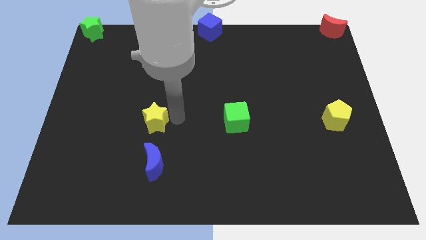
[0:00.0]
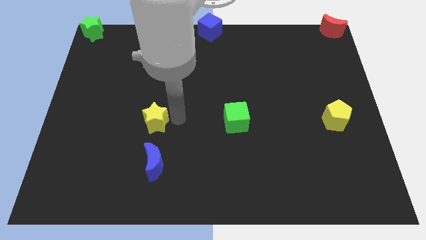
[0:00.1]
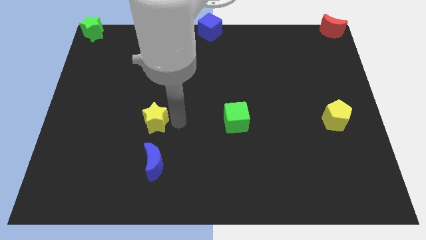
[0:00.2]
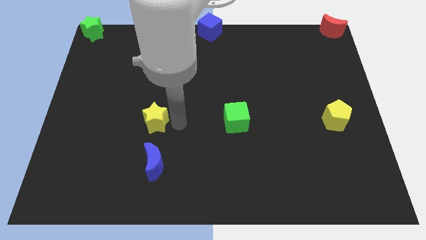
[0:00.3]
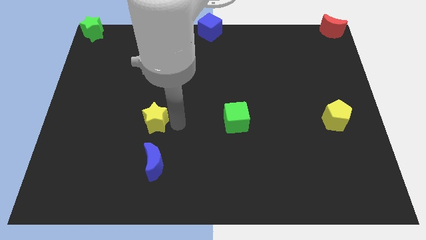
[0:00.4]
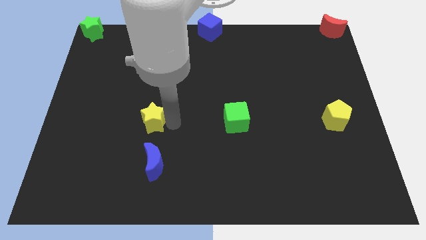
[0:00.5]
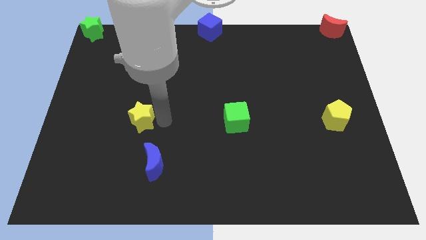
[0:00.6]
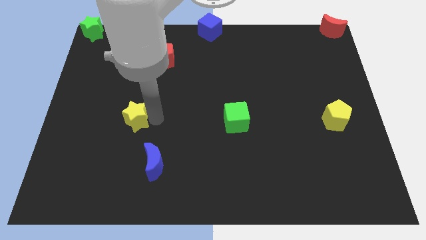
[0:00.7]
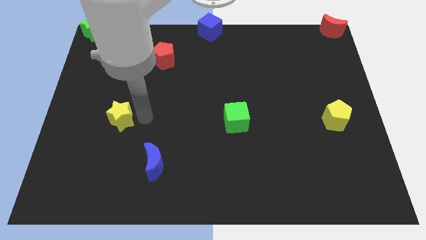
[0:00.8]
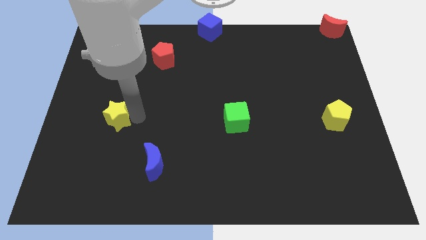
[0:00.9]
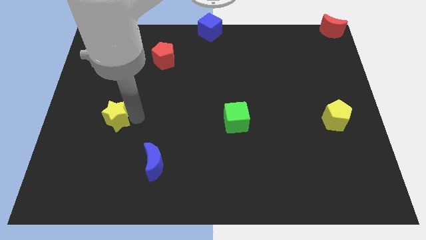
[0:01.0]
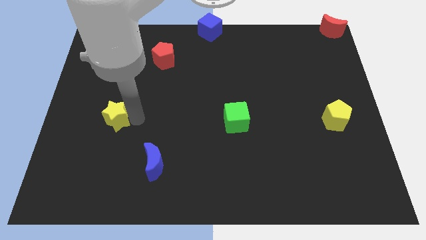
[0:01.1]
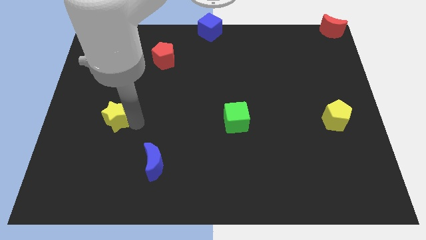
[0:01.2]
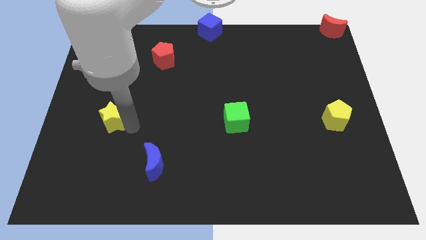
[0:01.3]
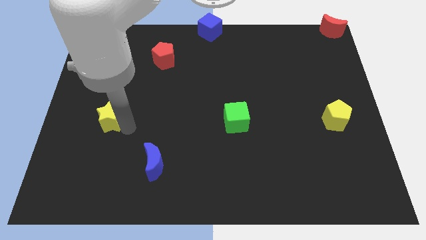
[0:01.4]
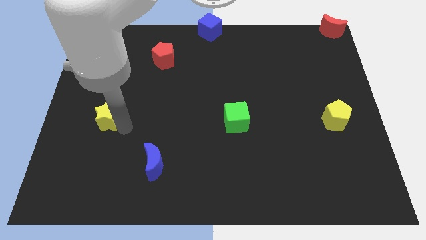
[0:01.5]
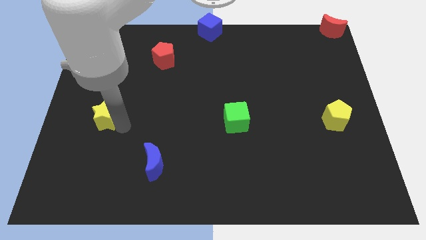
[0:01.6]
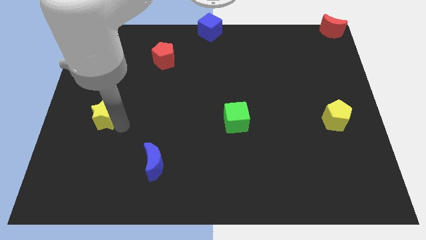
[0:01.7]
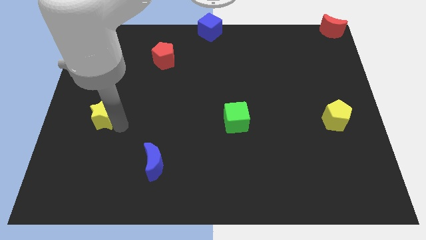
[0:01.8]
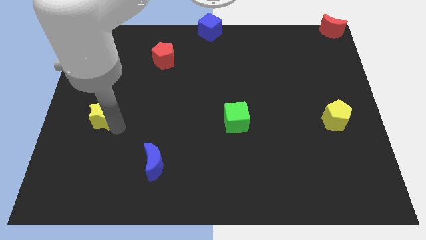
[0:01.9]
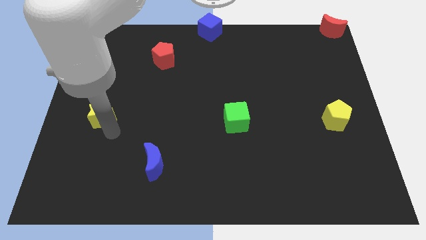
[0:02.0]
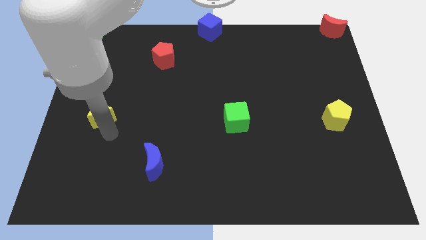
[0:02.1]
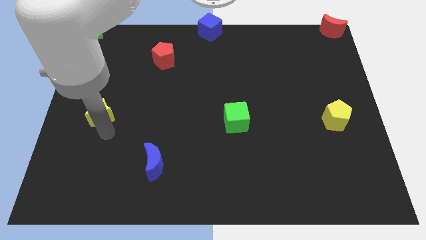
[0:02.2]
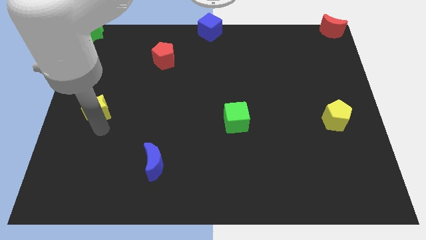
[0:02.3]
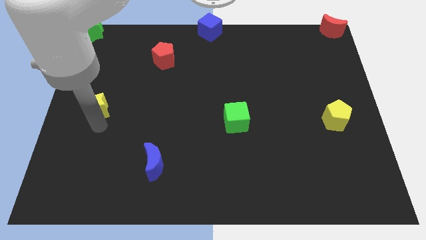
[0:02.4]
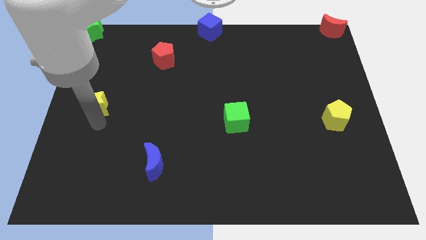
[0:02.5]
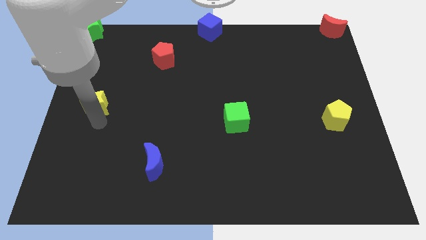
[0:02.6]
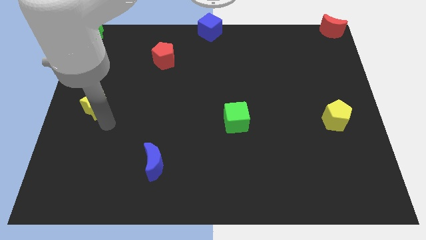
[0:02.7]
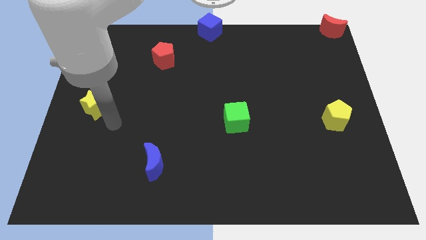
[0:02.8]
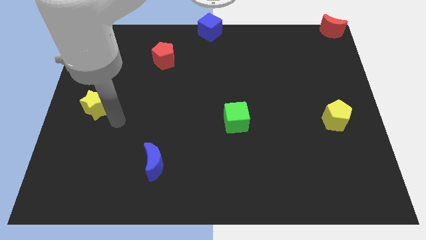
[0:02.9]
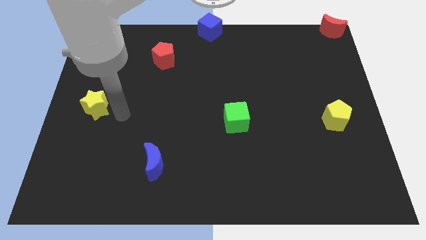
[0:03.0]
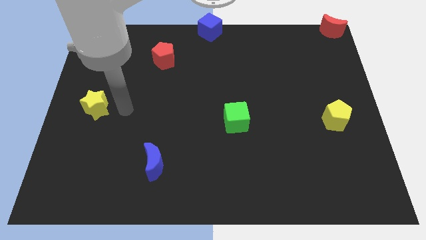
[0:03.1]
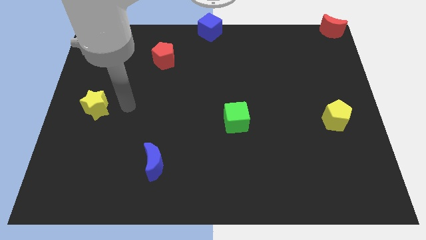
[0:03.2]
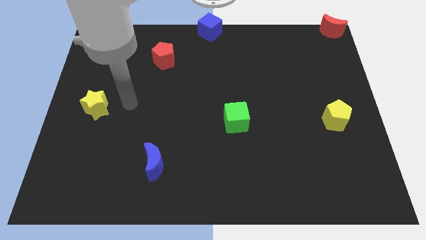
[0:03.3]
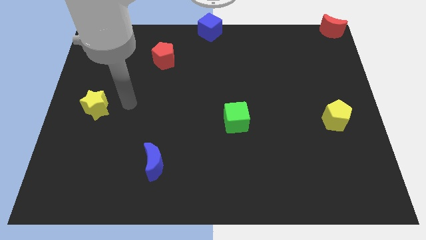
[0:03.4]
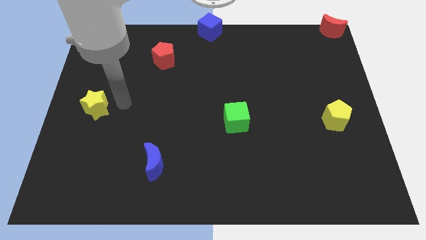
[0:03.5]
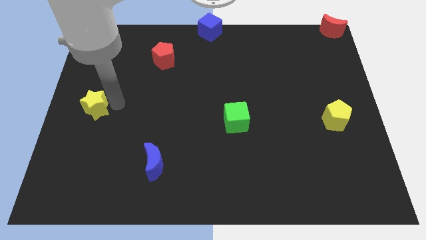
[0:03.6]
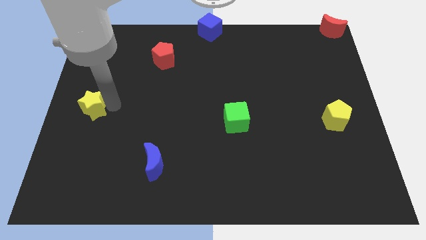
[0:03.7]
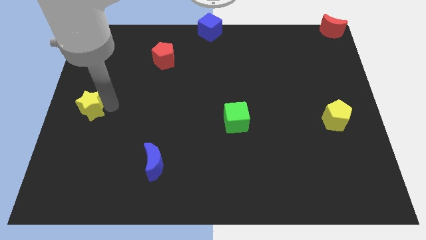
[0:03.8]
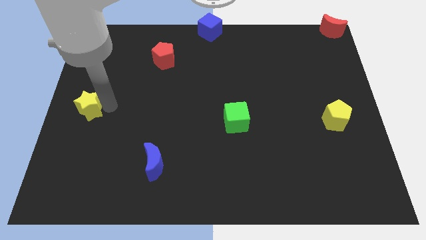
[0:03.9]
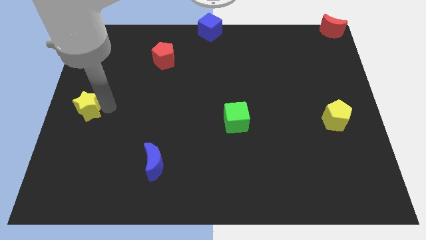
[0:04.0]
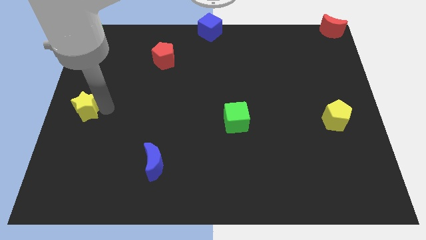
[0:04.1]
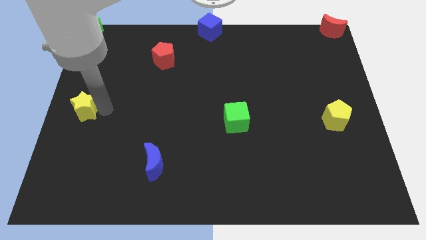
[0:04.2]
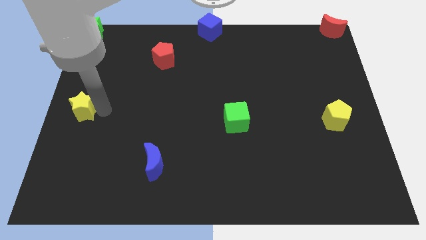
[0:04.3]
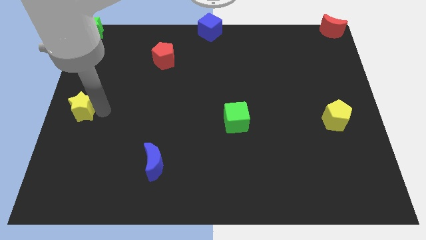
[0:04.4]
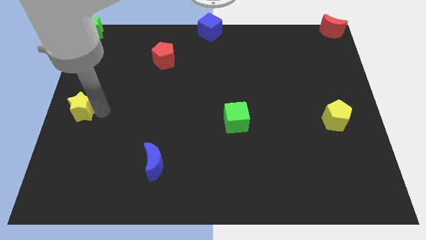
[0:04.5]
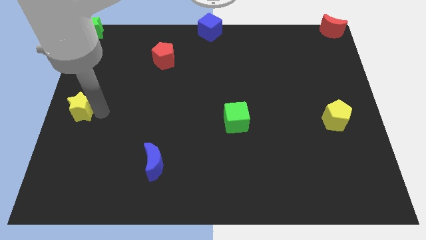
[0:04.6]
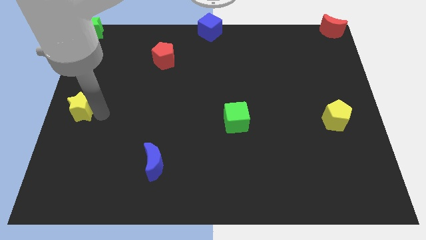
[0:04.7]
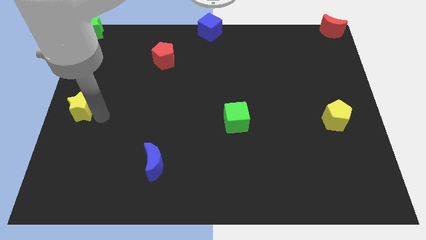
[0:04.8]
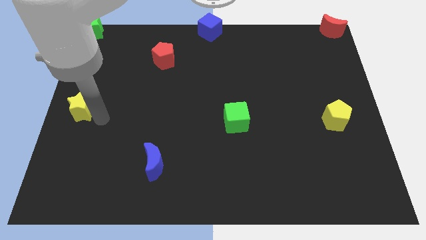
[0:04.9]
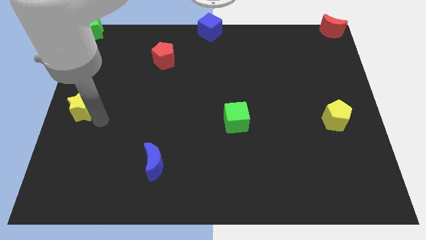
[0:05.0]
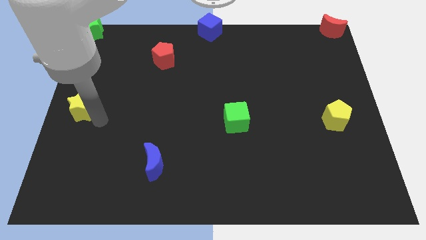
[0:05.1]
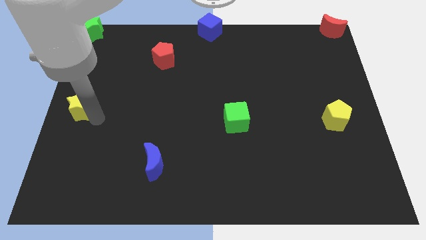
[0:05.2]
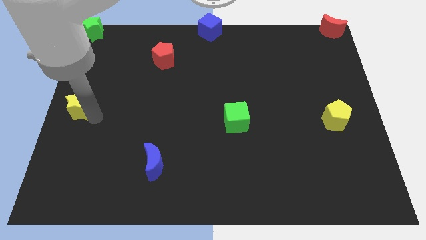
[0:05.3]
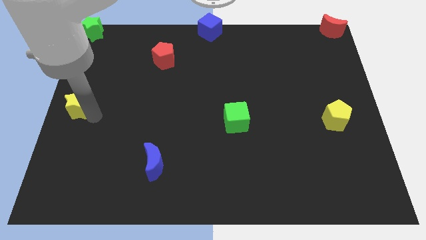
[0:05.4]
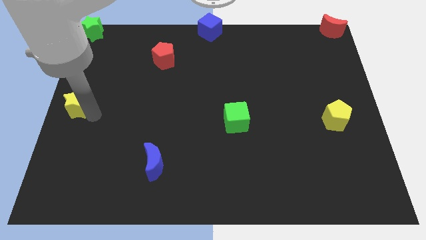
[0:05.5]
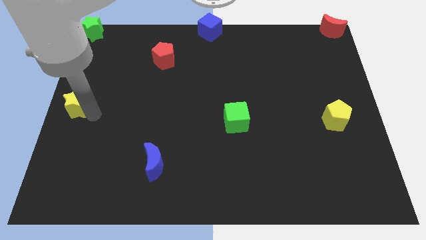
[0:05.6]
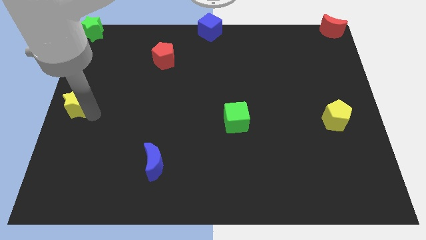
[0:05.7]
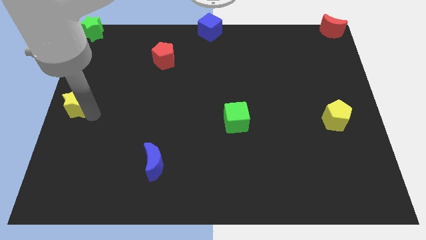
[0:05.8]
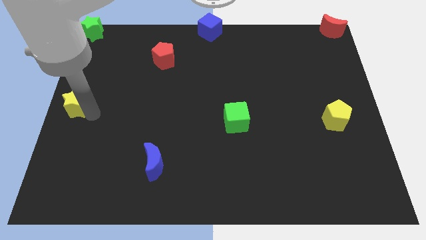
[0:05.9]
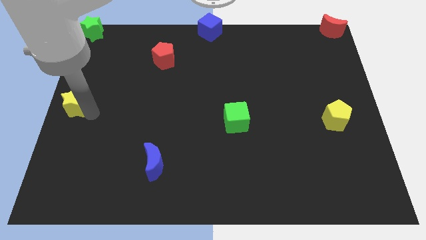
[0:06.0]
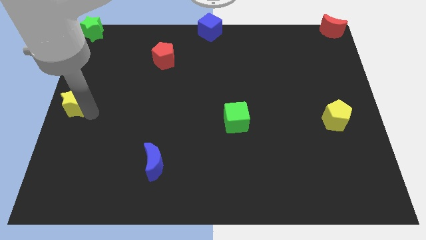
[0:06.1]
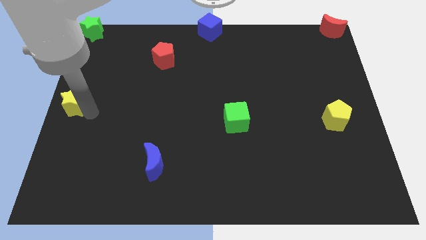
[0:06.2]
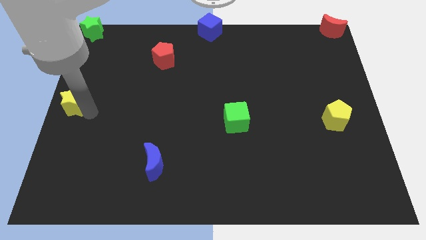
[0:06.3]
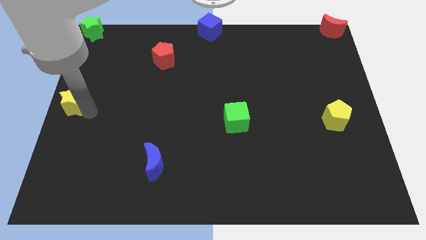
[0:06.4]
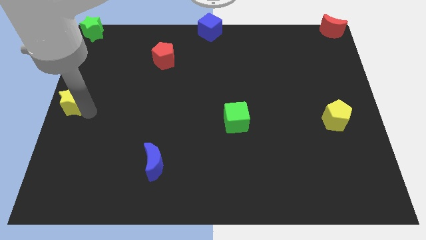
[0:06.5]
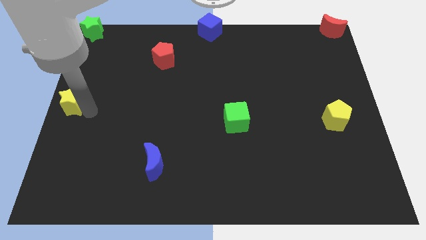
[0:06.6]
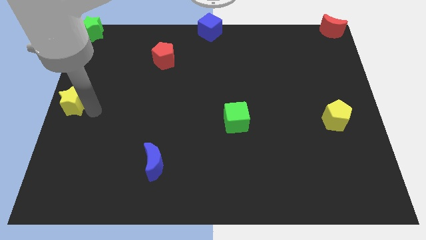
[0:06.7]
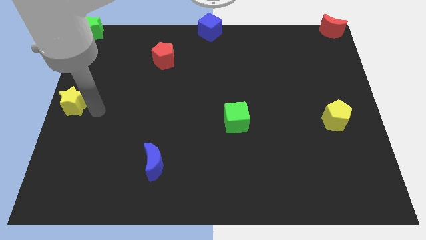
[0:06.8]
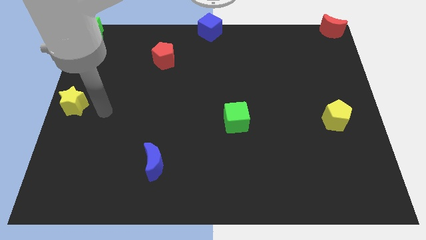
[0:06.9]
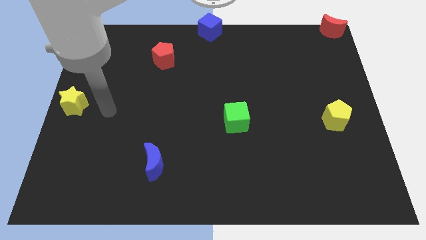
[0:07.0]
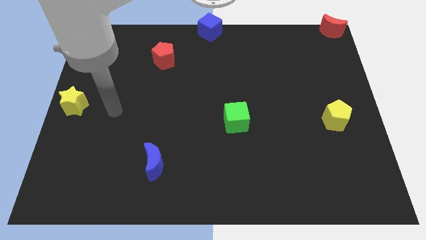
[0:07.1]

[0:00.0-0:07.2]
push the yellow star to the center left

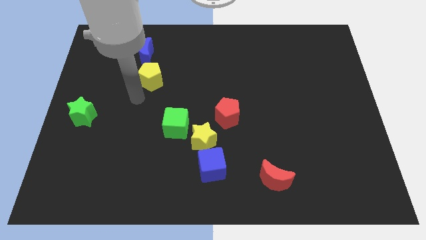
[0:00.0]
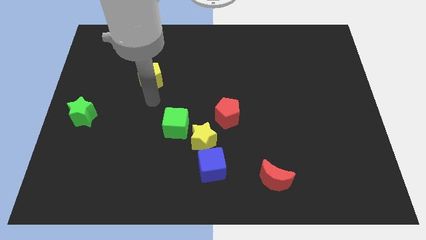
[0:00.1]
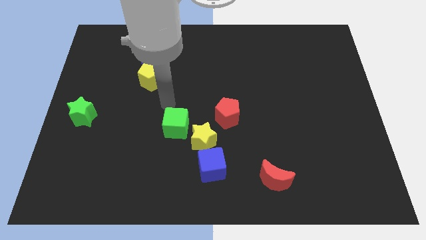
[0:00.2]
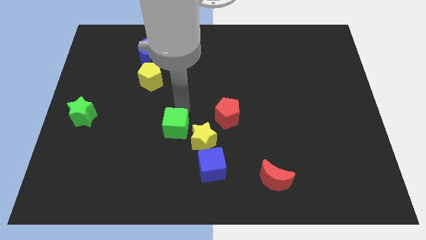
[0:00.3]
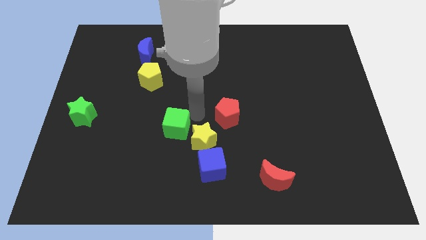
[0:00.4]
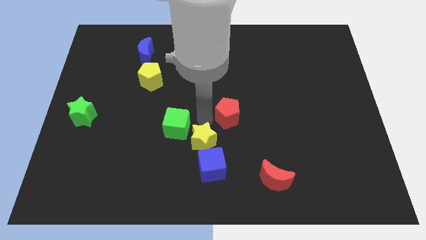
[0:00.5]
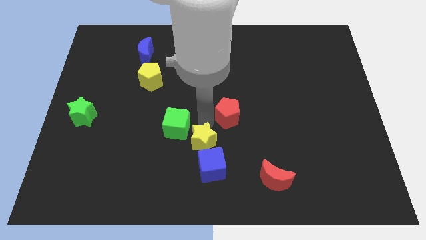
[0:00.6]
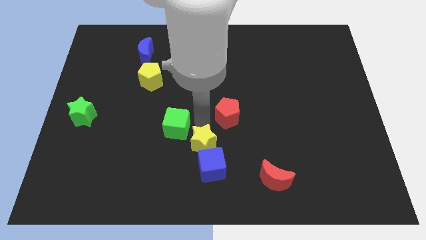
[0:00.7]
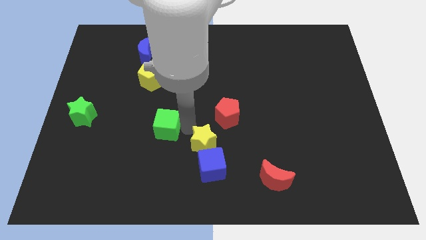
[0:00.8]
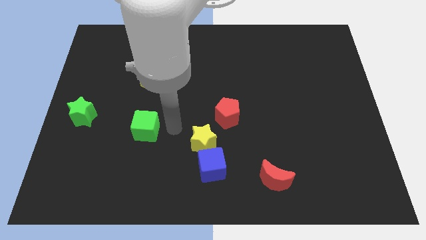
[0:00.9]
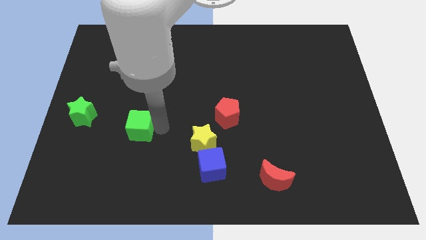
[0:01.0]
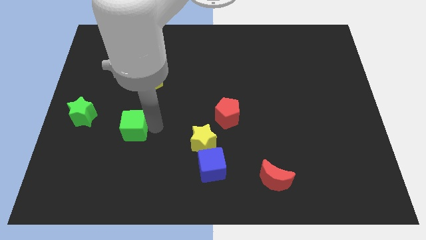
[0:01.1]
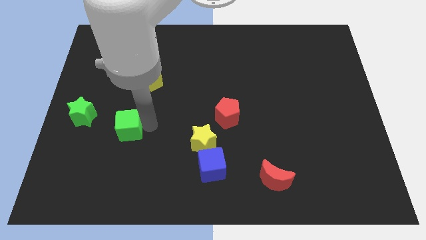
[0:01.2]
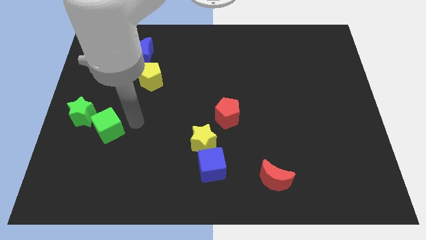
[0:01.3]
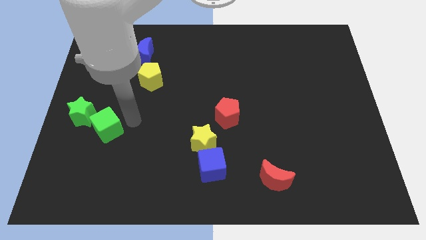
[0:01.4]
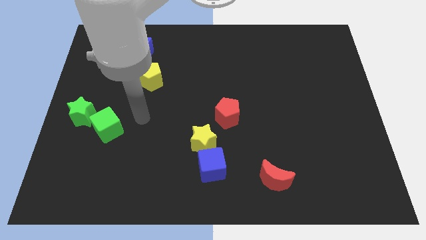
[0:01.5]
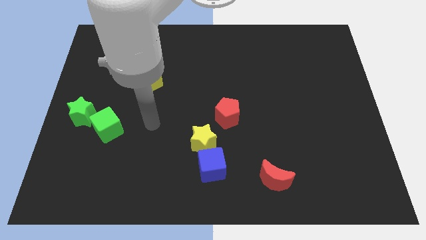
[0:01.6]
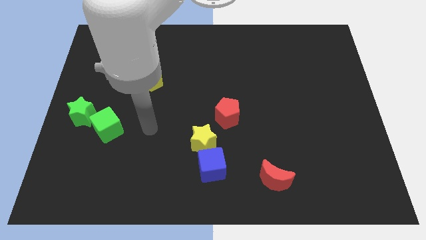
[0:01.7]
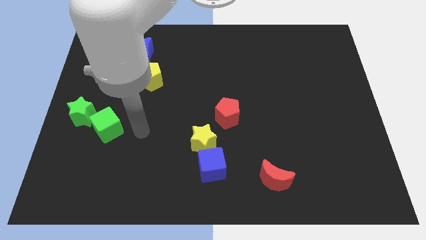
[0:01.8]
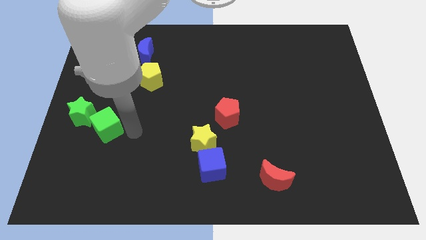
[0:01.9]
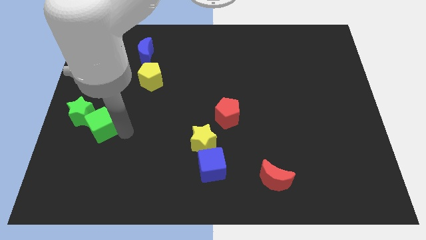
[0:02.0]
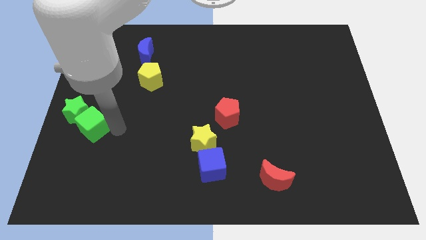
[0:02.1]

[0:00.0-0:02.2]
put the green blocks together
